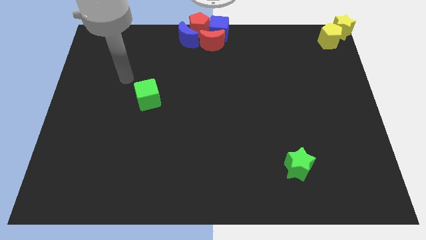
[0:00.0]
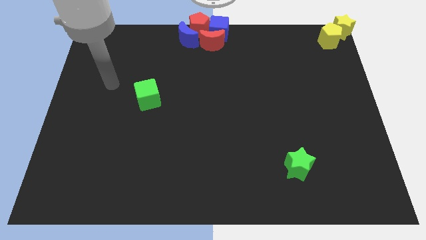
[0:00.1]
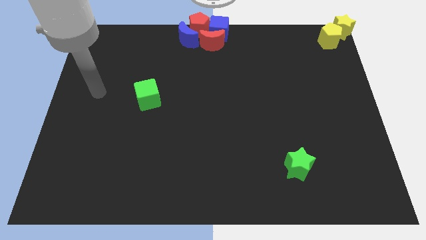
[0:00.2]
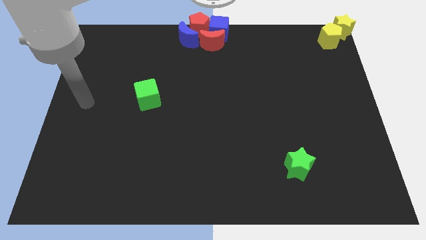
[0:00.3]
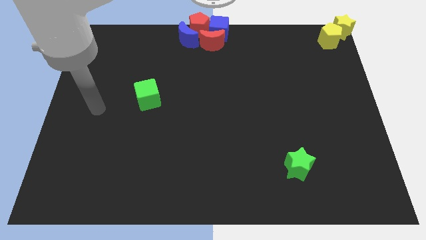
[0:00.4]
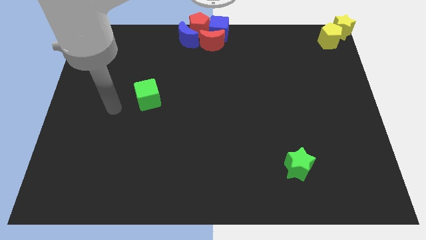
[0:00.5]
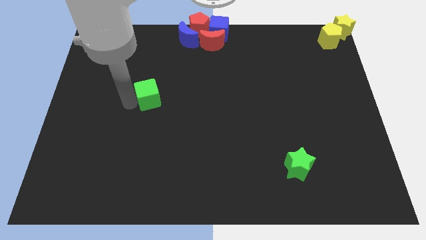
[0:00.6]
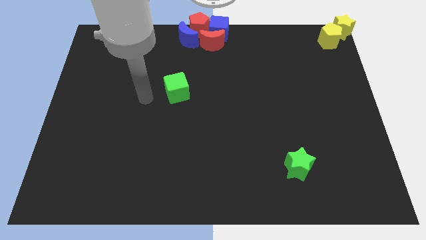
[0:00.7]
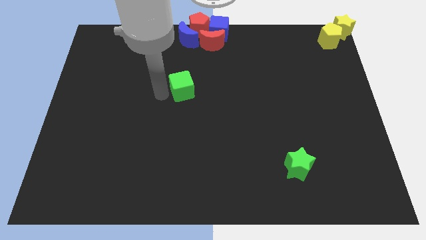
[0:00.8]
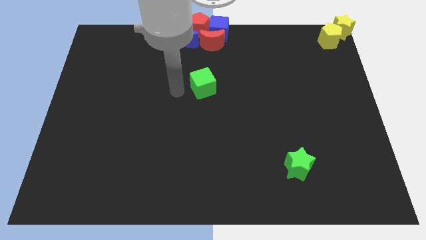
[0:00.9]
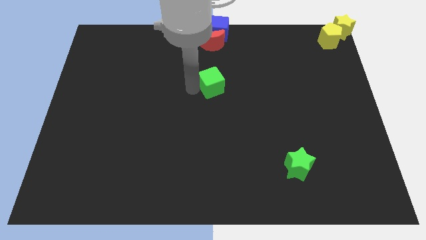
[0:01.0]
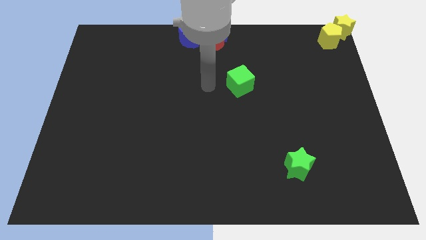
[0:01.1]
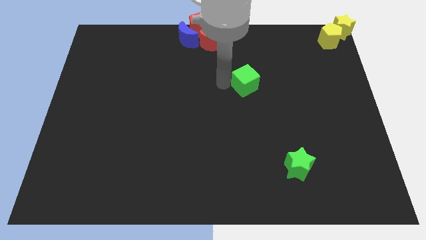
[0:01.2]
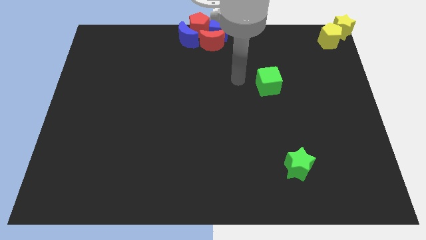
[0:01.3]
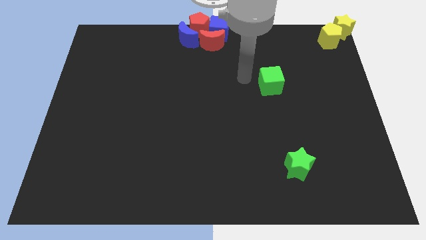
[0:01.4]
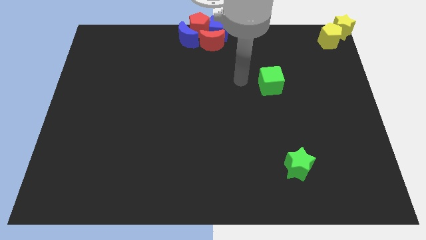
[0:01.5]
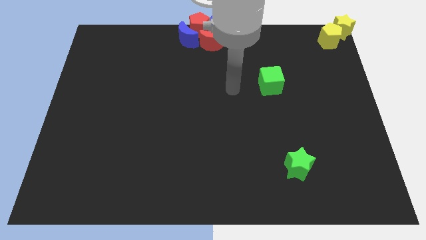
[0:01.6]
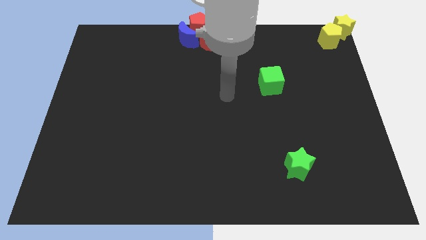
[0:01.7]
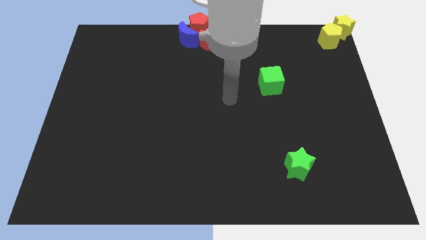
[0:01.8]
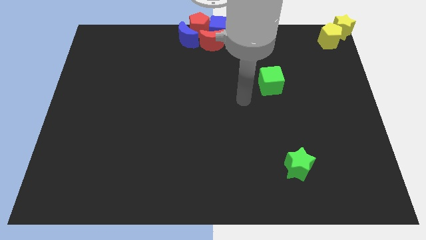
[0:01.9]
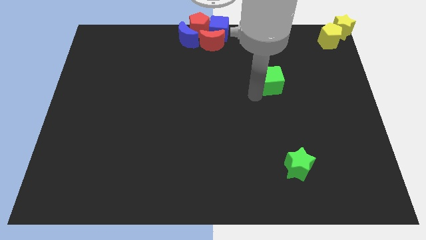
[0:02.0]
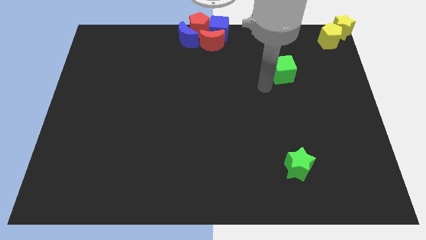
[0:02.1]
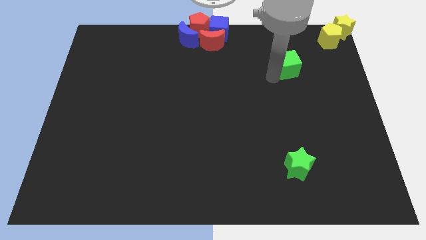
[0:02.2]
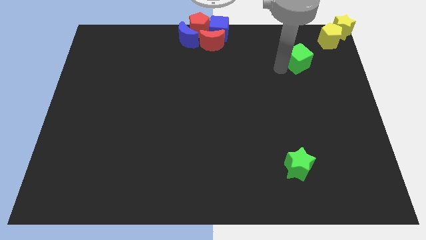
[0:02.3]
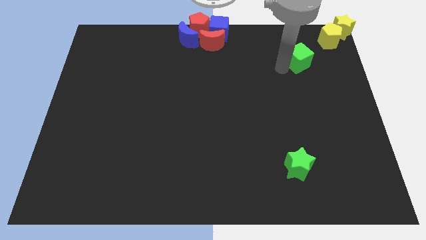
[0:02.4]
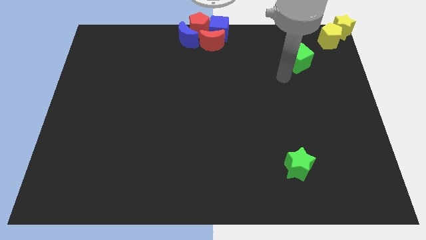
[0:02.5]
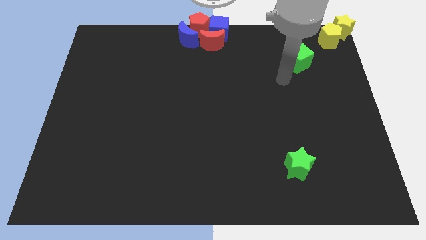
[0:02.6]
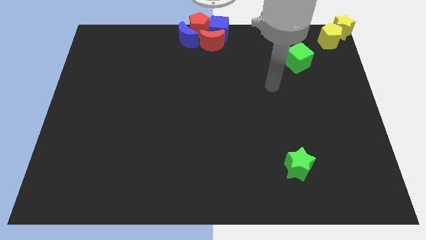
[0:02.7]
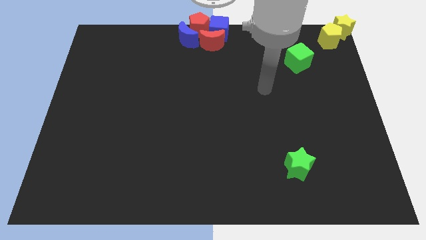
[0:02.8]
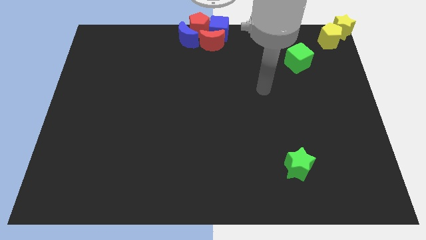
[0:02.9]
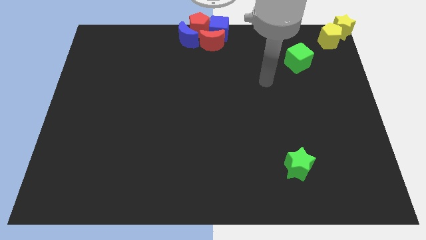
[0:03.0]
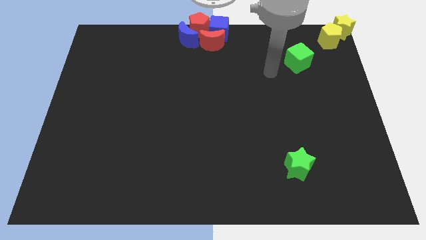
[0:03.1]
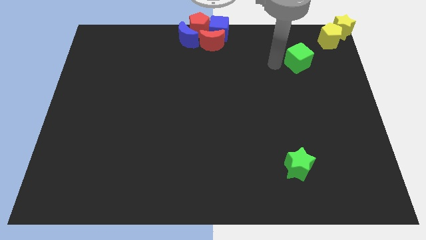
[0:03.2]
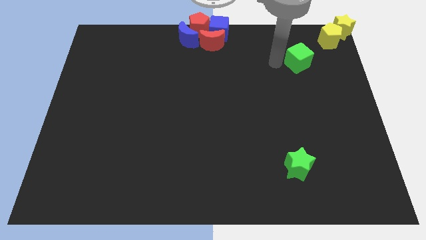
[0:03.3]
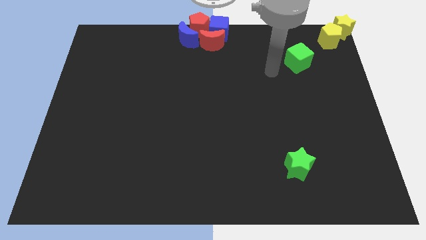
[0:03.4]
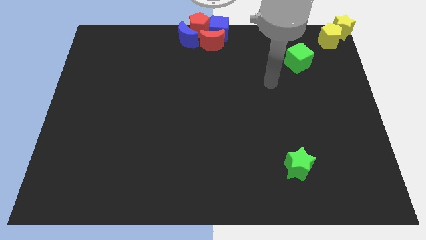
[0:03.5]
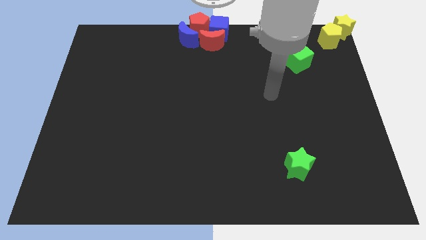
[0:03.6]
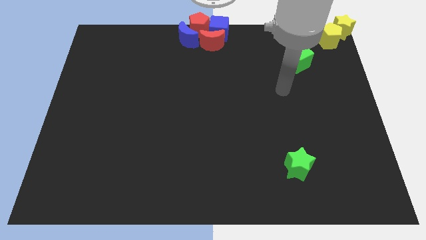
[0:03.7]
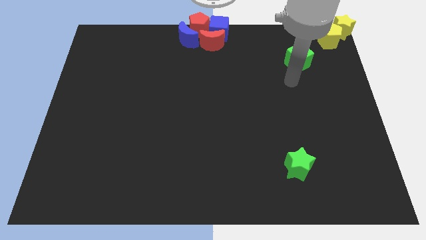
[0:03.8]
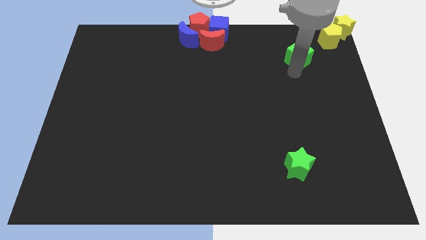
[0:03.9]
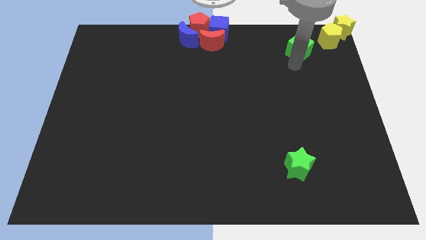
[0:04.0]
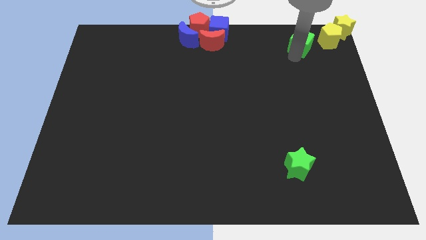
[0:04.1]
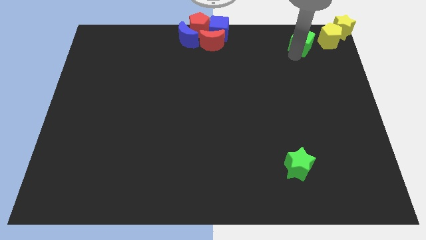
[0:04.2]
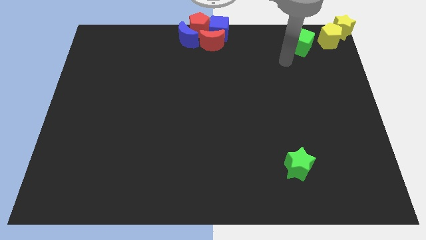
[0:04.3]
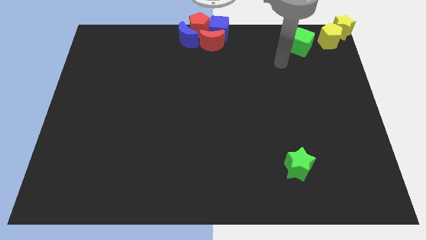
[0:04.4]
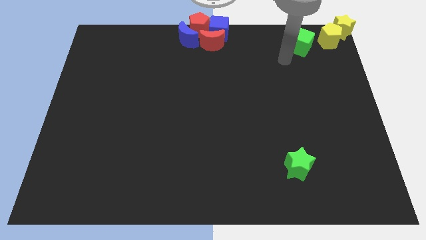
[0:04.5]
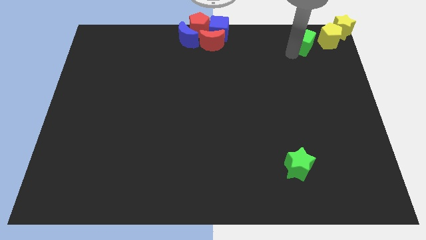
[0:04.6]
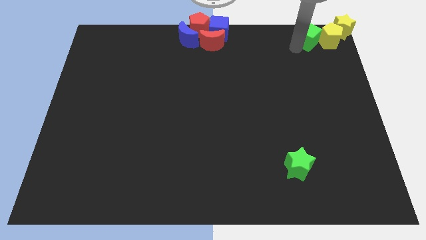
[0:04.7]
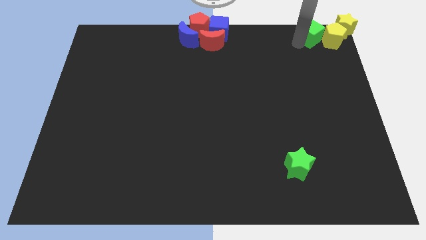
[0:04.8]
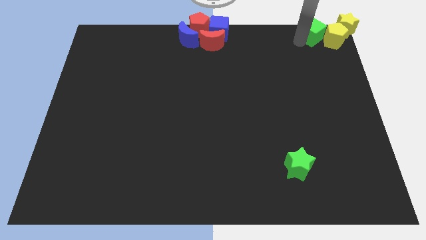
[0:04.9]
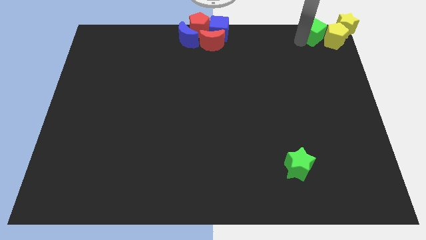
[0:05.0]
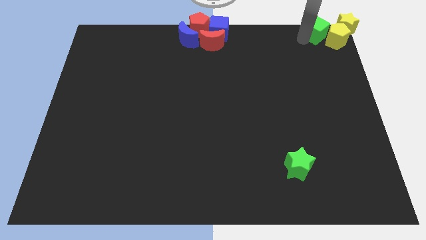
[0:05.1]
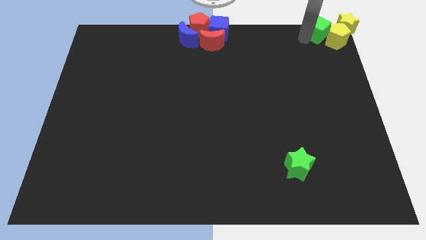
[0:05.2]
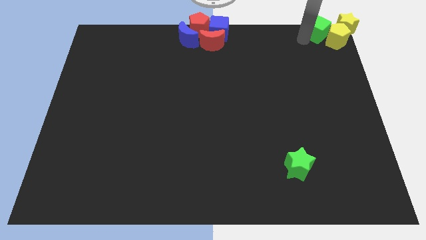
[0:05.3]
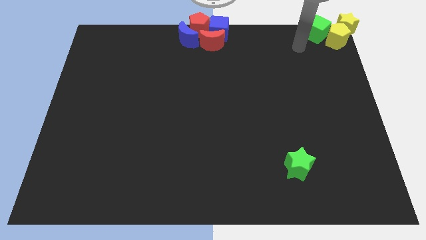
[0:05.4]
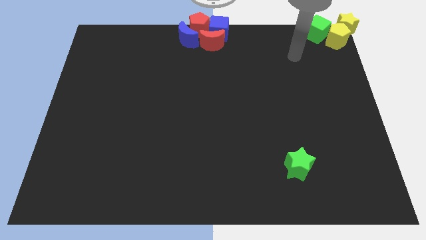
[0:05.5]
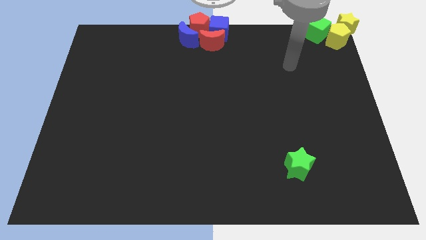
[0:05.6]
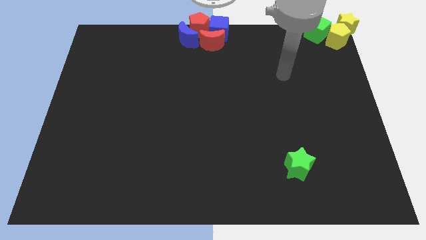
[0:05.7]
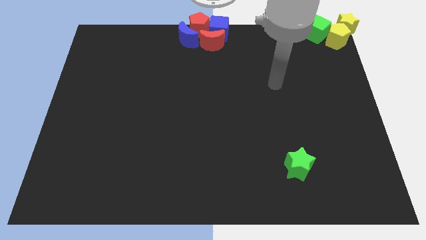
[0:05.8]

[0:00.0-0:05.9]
move the green cube to the top left of the yellow pentagon

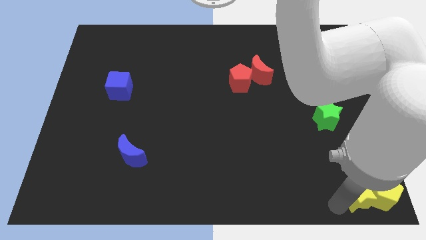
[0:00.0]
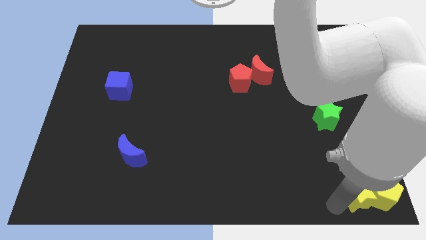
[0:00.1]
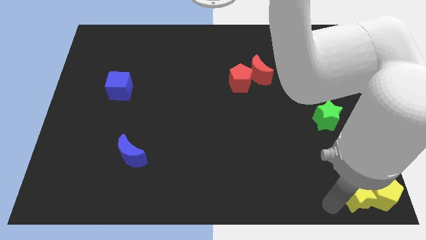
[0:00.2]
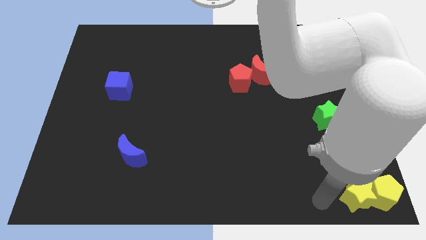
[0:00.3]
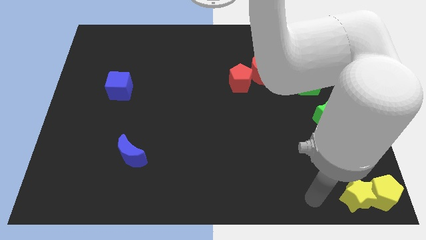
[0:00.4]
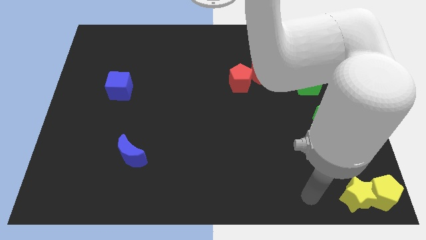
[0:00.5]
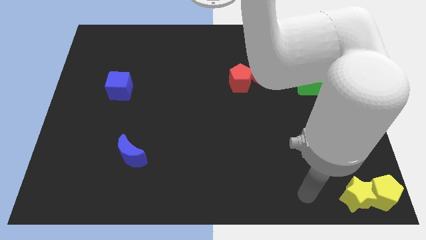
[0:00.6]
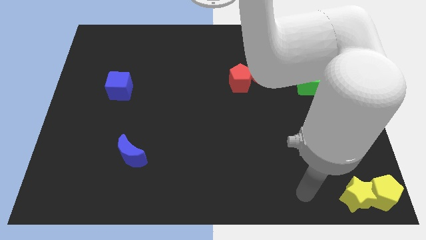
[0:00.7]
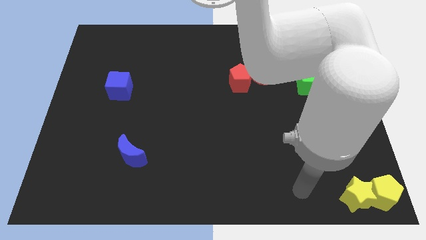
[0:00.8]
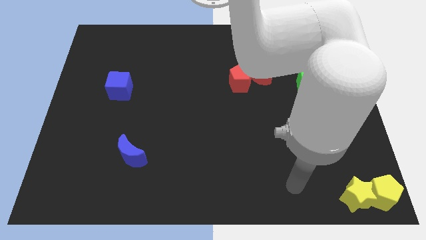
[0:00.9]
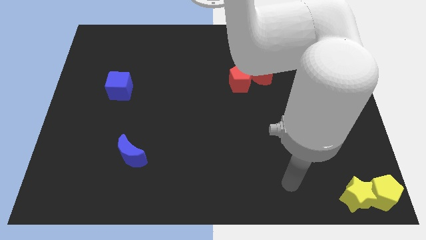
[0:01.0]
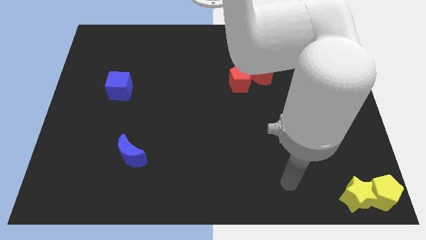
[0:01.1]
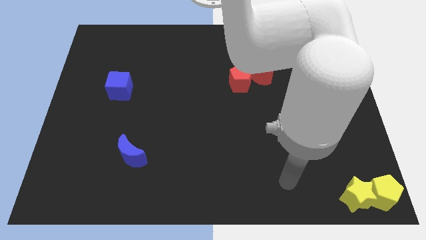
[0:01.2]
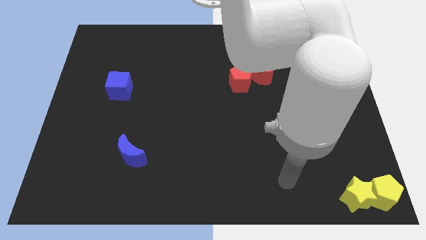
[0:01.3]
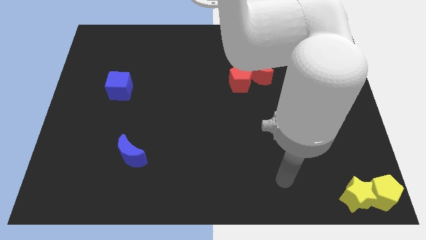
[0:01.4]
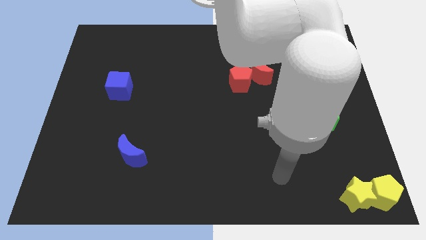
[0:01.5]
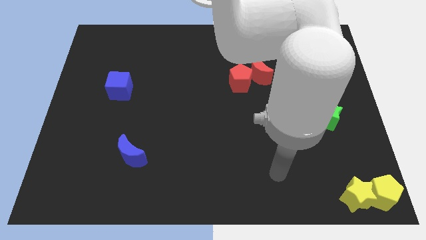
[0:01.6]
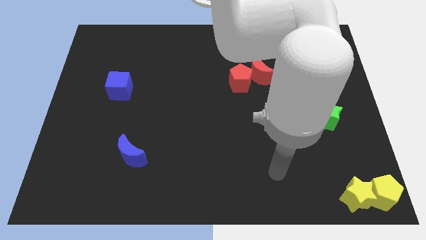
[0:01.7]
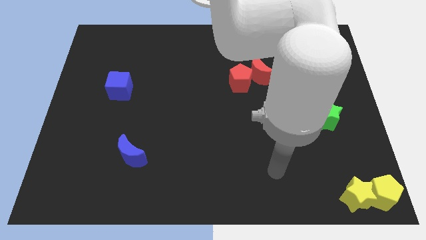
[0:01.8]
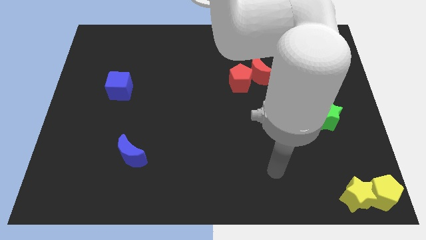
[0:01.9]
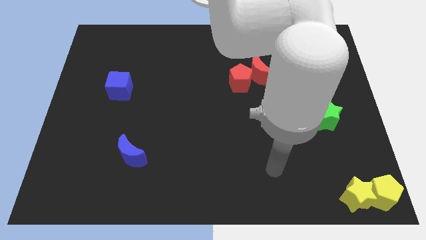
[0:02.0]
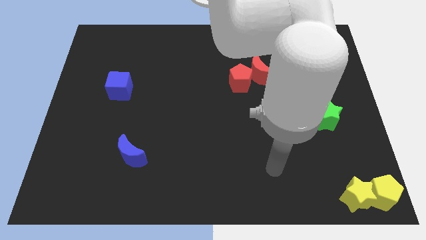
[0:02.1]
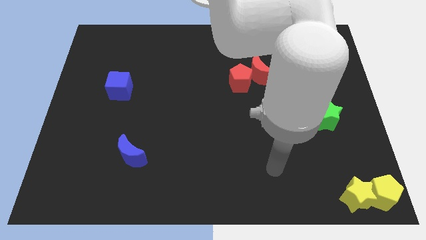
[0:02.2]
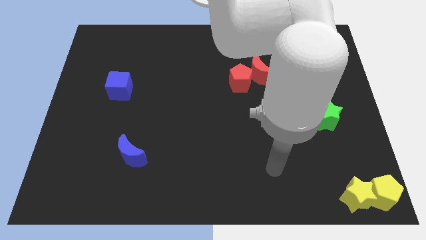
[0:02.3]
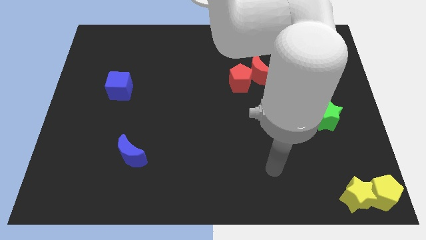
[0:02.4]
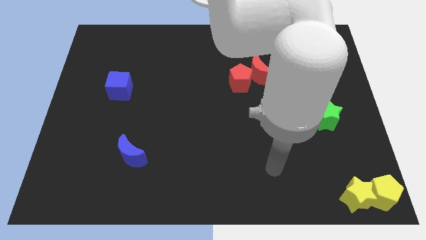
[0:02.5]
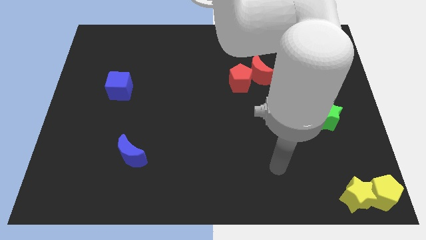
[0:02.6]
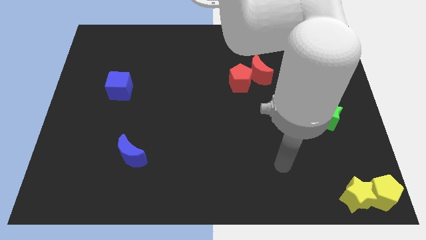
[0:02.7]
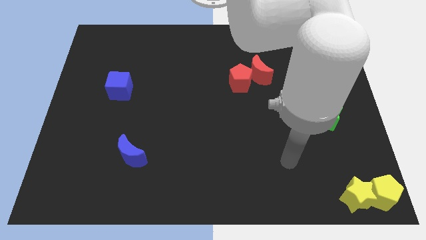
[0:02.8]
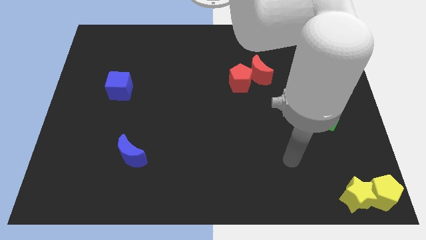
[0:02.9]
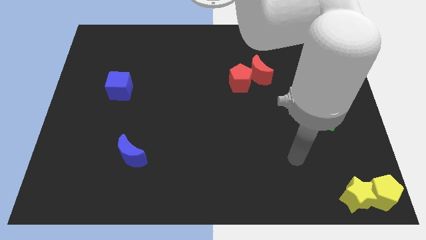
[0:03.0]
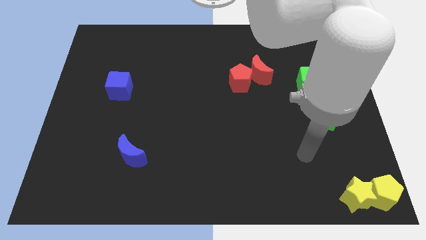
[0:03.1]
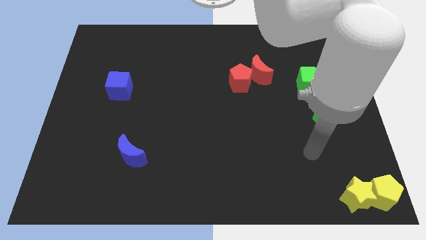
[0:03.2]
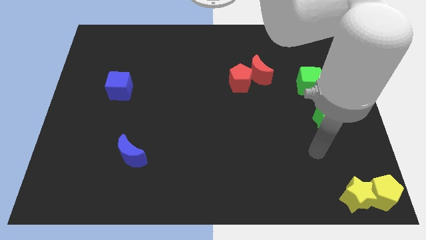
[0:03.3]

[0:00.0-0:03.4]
move the arm towards the green star
